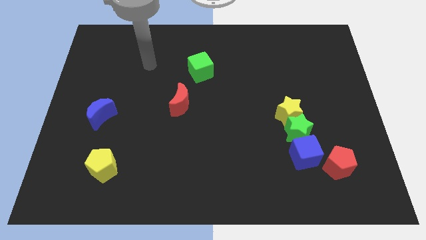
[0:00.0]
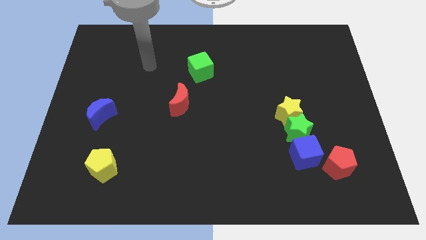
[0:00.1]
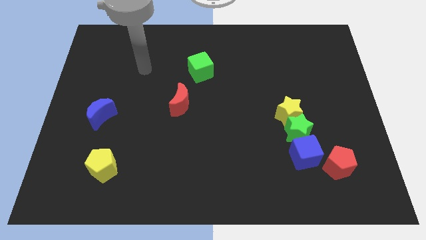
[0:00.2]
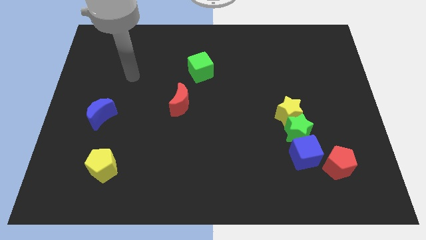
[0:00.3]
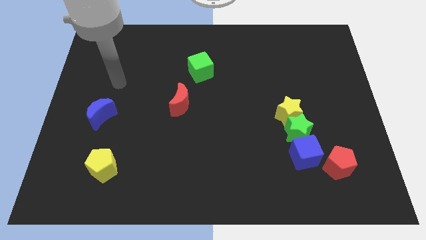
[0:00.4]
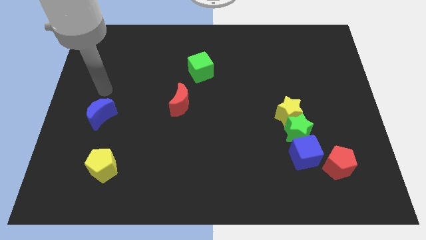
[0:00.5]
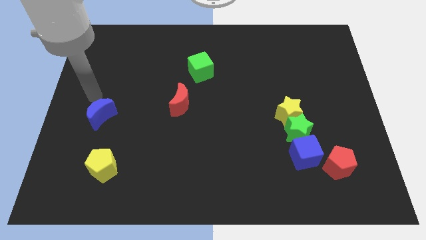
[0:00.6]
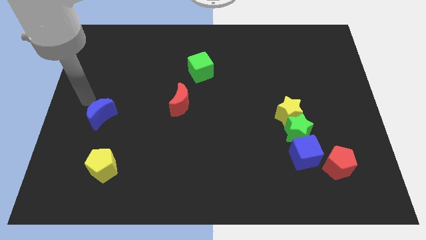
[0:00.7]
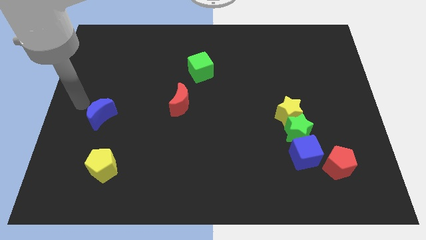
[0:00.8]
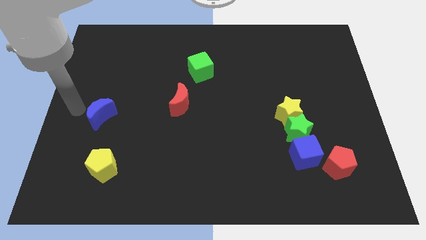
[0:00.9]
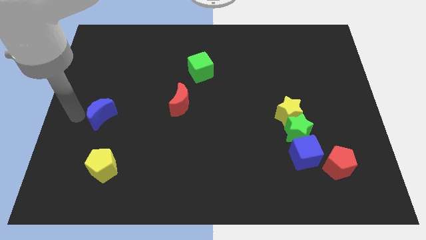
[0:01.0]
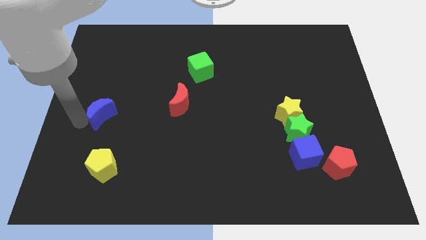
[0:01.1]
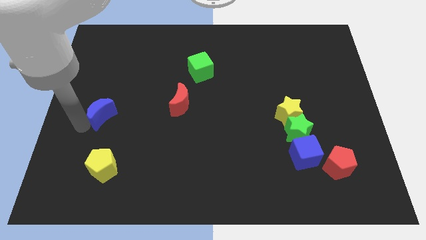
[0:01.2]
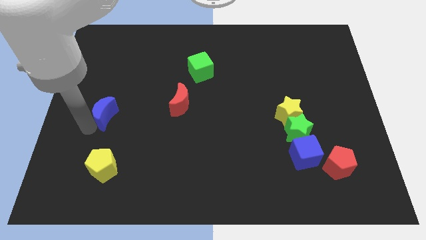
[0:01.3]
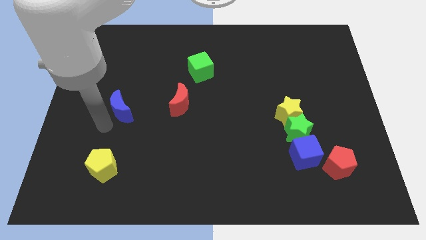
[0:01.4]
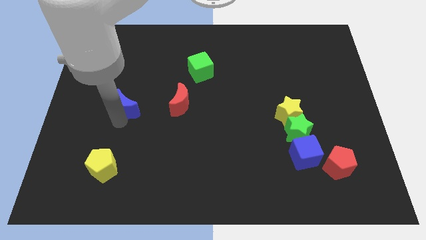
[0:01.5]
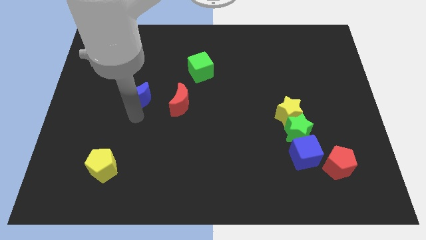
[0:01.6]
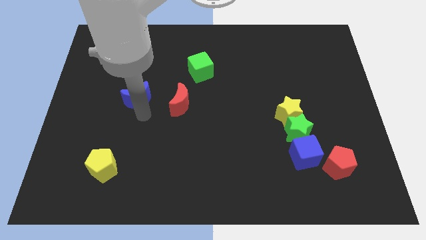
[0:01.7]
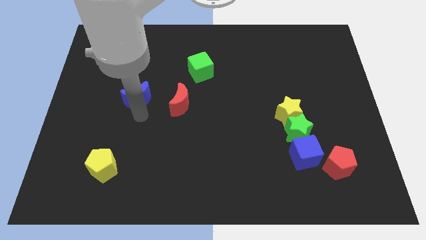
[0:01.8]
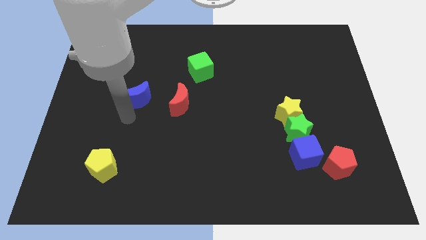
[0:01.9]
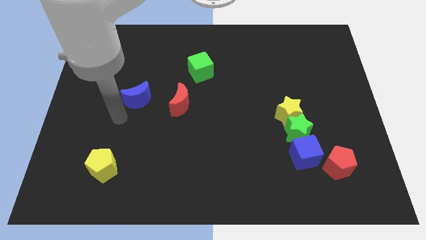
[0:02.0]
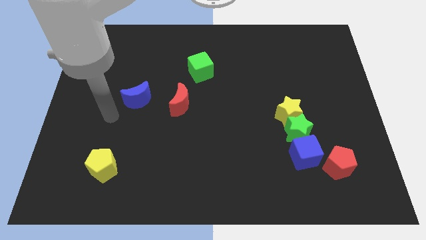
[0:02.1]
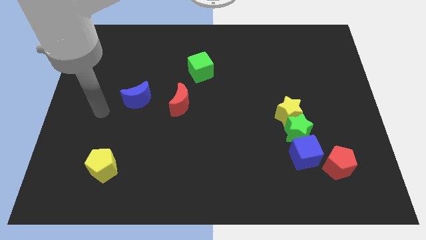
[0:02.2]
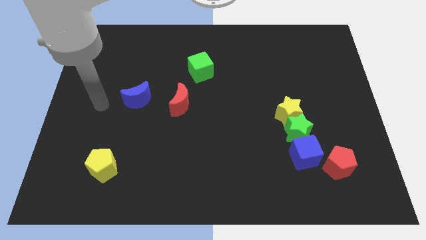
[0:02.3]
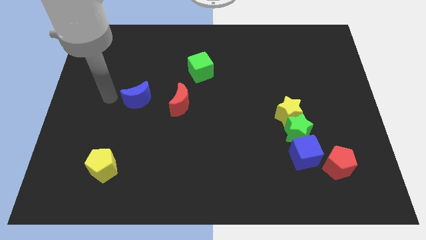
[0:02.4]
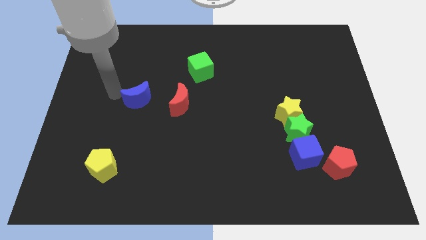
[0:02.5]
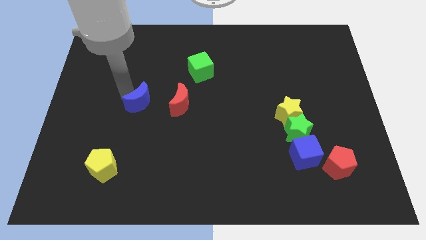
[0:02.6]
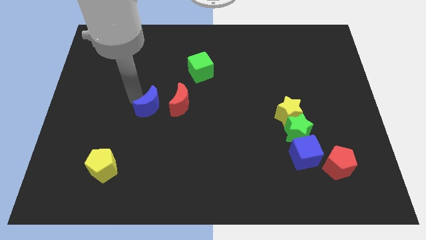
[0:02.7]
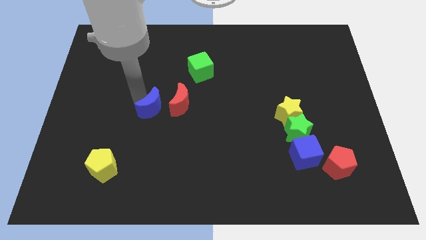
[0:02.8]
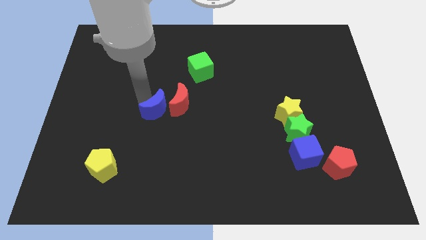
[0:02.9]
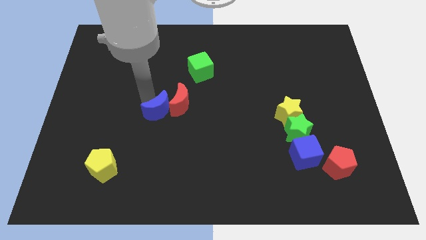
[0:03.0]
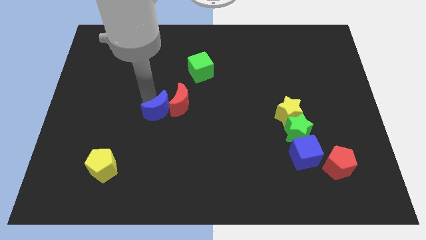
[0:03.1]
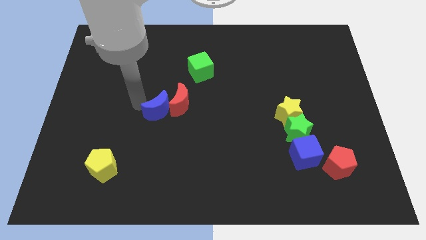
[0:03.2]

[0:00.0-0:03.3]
push the blue crescent to the left of the red crescent

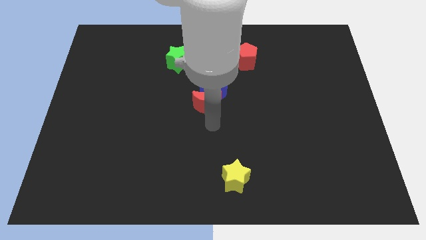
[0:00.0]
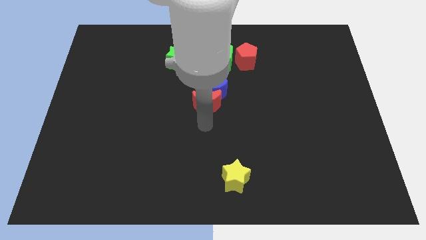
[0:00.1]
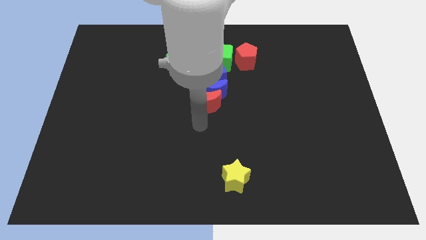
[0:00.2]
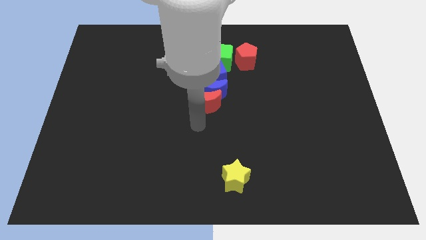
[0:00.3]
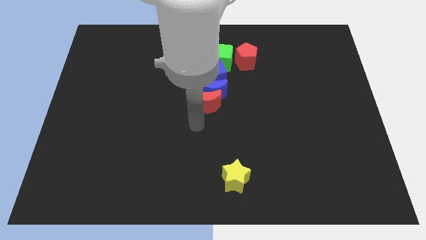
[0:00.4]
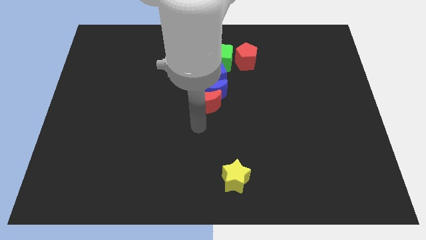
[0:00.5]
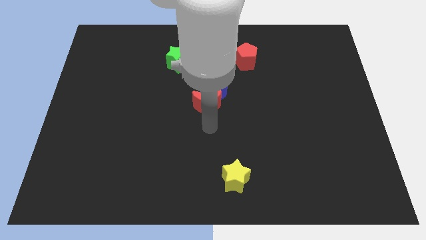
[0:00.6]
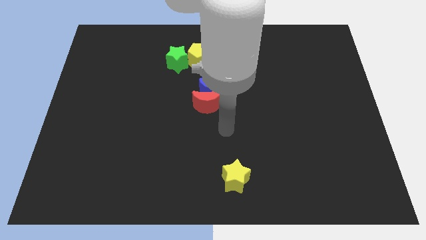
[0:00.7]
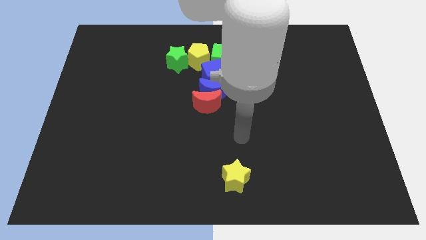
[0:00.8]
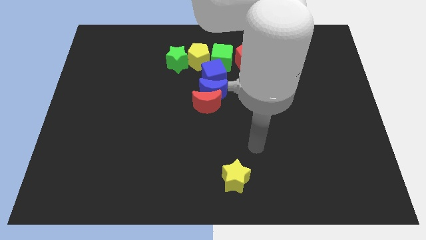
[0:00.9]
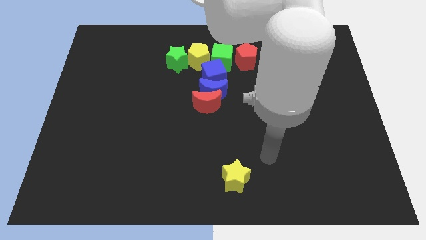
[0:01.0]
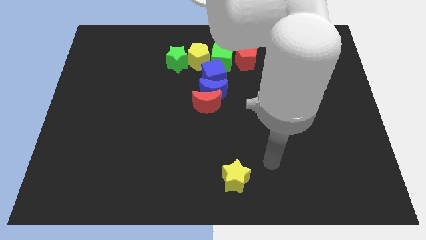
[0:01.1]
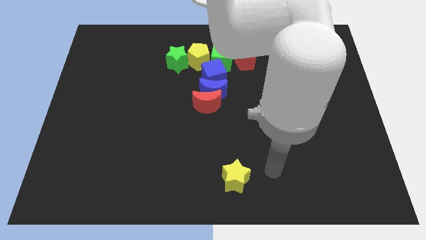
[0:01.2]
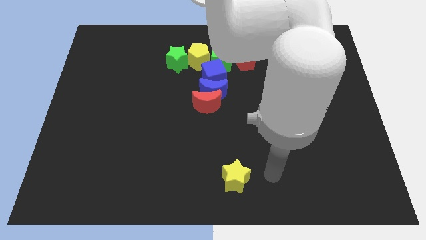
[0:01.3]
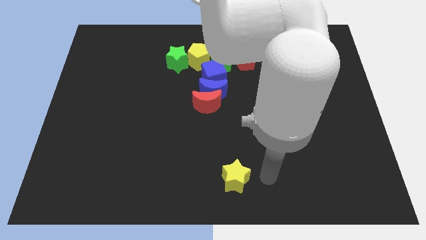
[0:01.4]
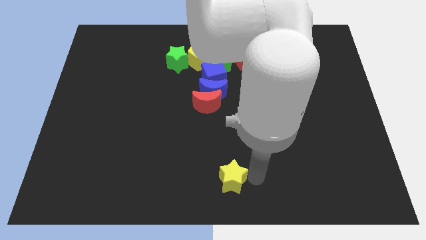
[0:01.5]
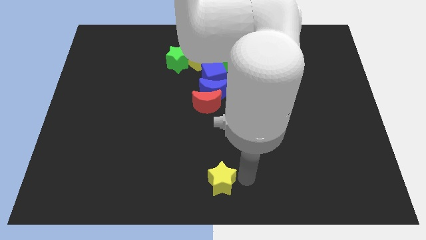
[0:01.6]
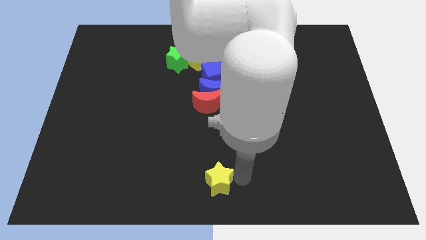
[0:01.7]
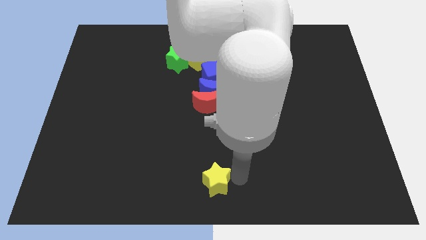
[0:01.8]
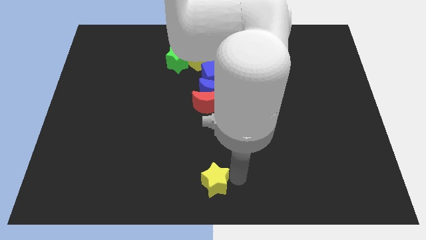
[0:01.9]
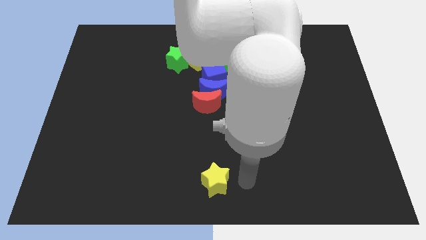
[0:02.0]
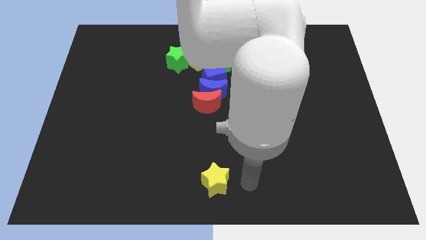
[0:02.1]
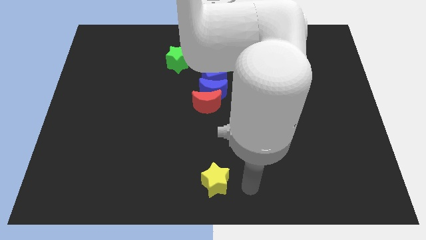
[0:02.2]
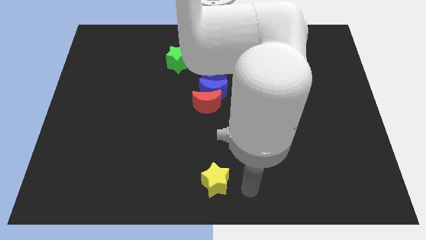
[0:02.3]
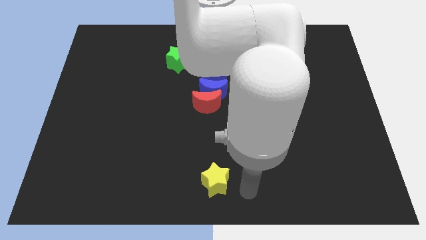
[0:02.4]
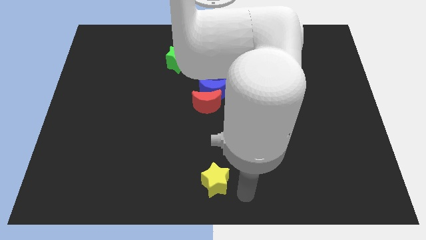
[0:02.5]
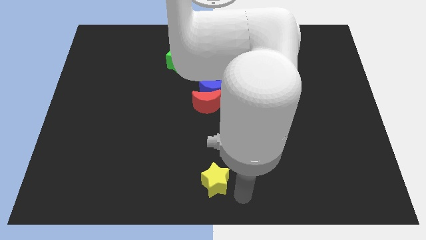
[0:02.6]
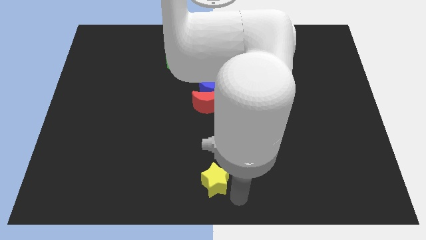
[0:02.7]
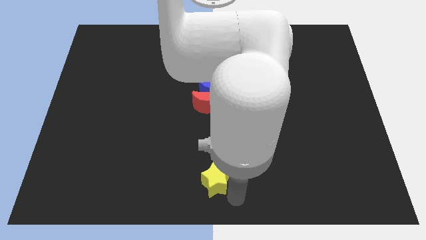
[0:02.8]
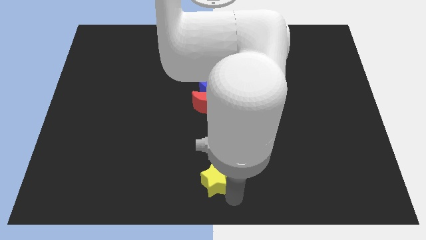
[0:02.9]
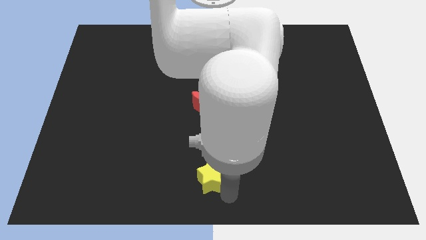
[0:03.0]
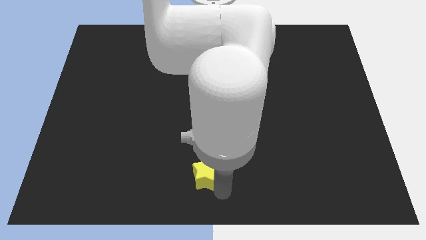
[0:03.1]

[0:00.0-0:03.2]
move the yellow star to the vertical bottom side of the red moon

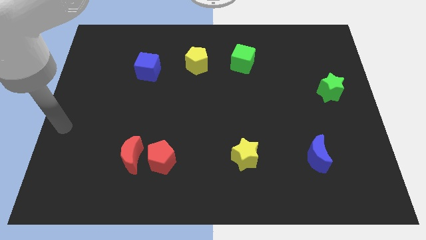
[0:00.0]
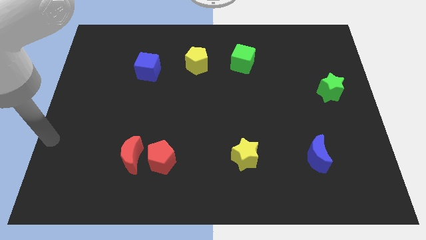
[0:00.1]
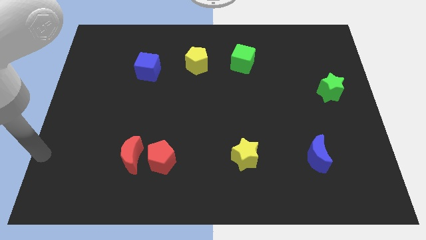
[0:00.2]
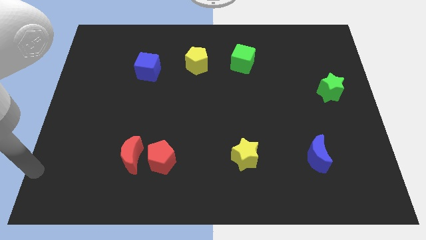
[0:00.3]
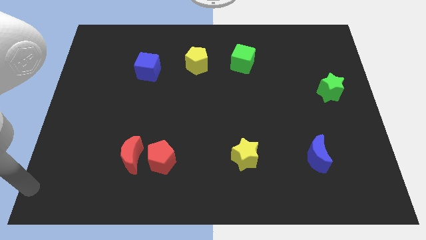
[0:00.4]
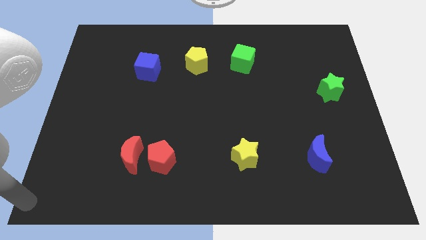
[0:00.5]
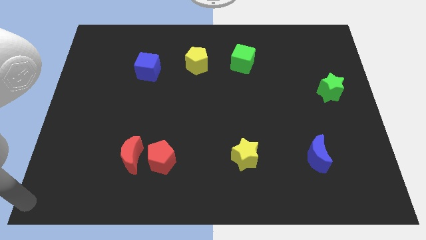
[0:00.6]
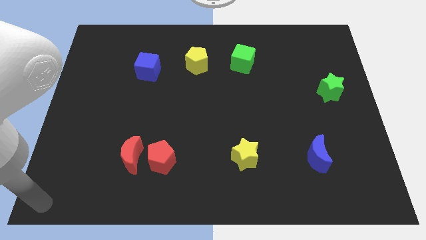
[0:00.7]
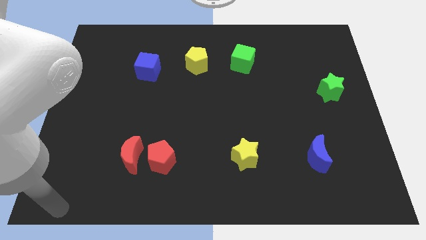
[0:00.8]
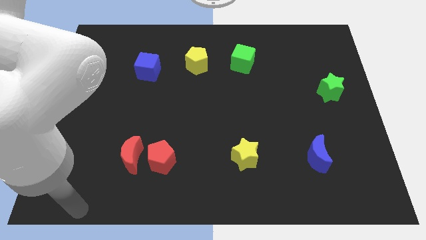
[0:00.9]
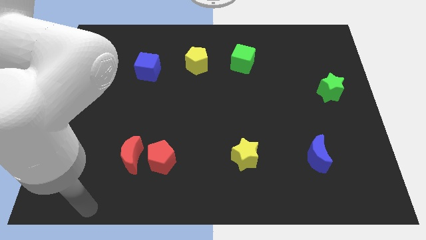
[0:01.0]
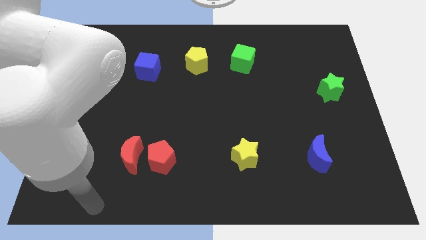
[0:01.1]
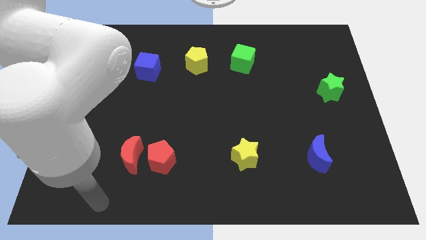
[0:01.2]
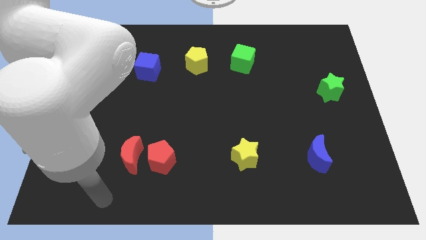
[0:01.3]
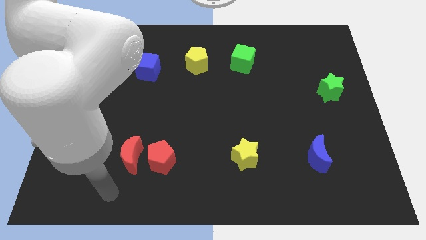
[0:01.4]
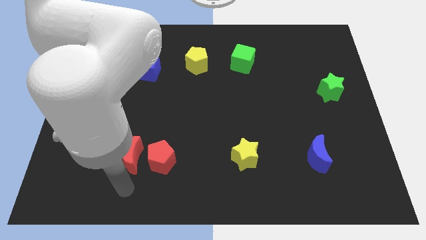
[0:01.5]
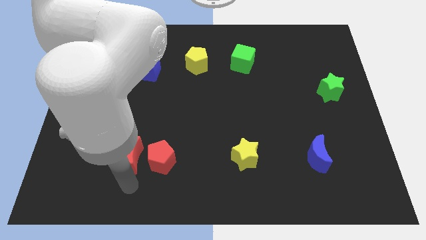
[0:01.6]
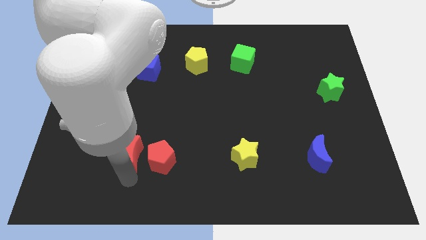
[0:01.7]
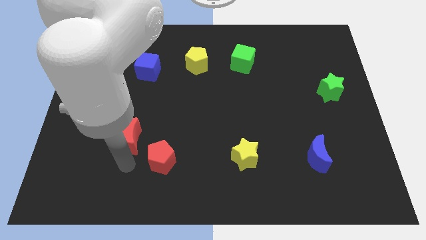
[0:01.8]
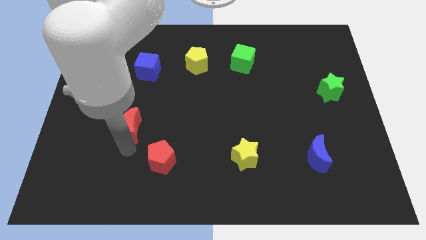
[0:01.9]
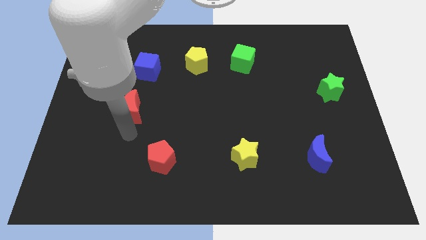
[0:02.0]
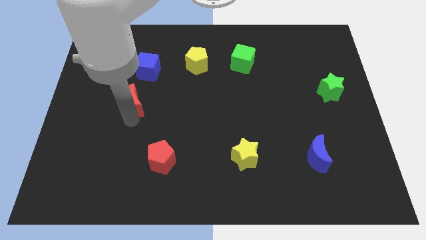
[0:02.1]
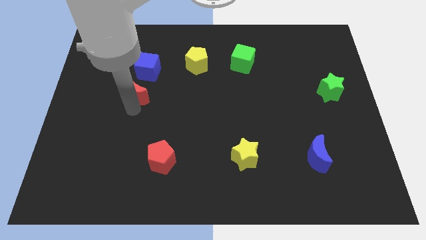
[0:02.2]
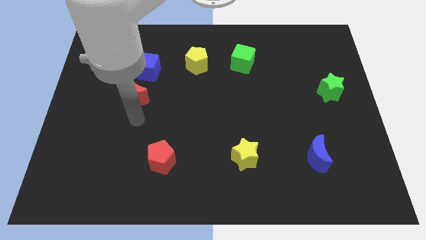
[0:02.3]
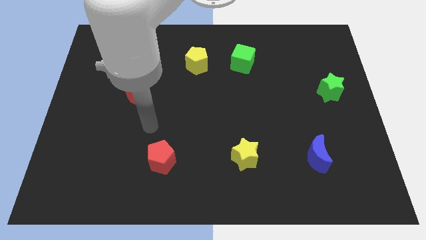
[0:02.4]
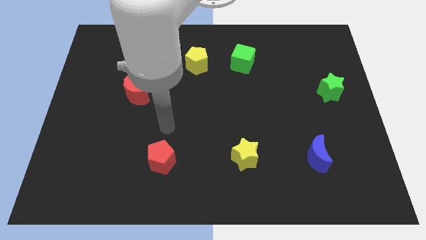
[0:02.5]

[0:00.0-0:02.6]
place the red moon above the red pentagon

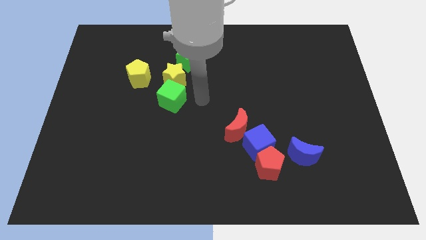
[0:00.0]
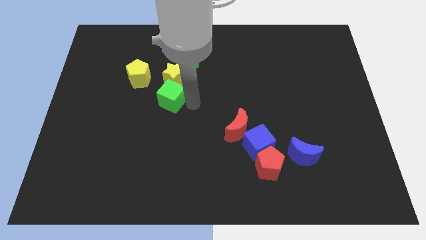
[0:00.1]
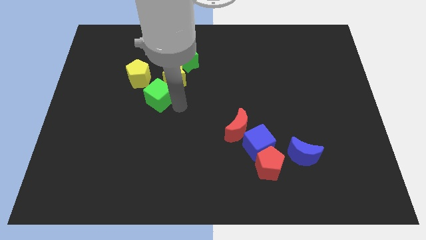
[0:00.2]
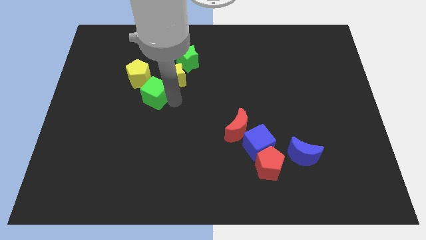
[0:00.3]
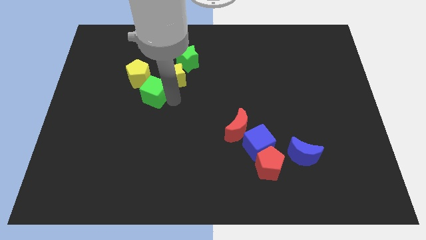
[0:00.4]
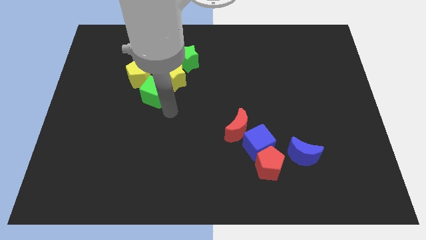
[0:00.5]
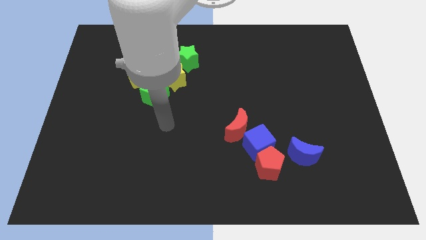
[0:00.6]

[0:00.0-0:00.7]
move the green cube to the bottom of the yellow star
